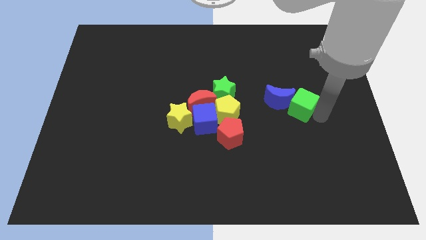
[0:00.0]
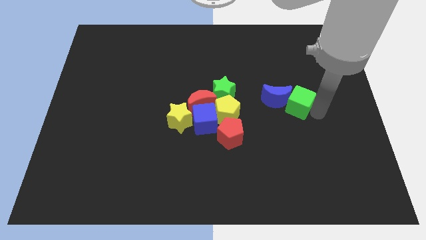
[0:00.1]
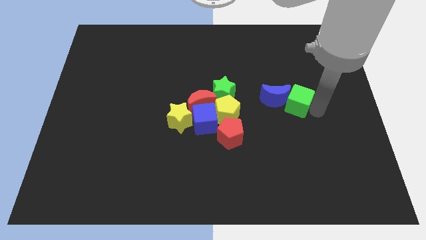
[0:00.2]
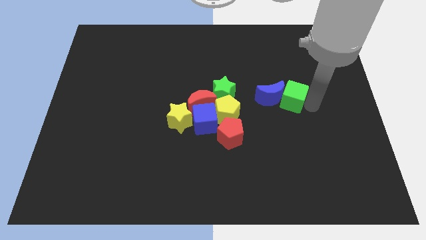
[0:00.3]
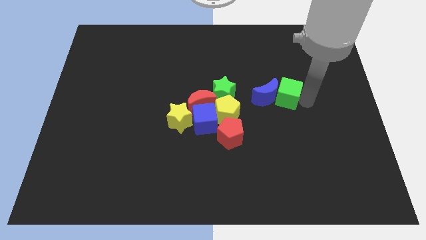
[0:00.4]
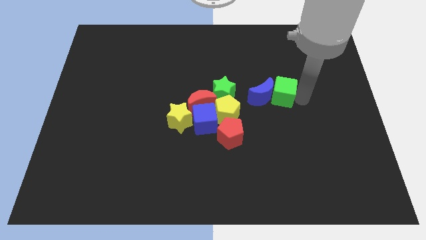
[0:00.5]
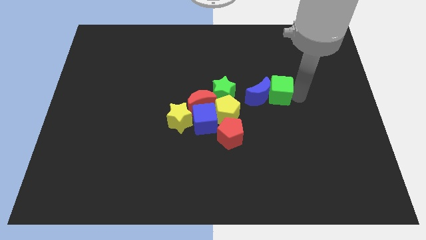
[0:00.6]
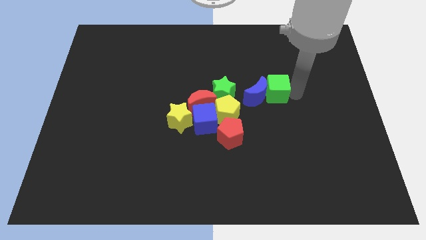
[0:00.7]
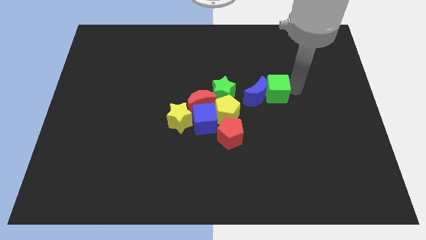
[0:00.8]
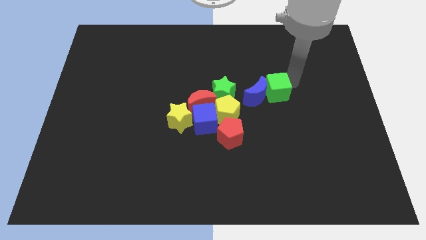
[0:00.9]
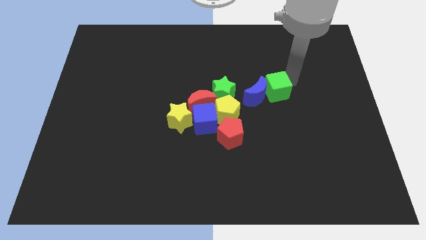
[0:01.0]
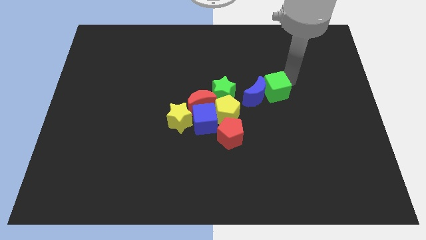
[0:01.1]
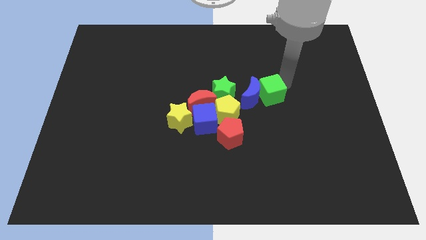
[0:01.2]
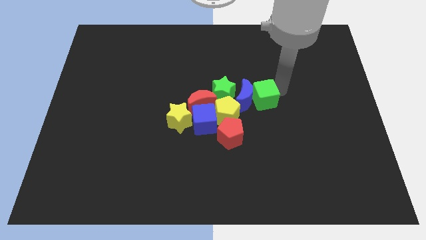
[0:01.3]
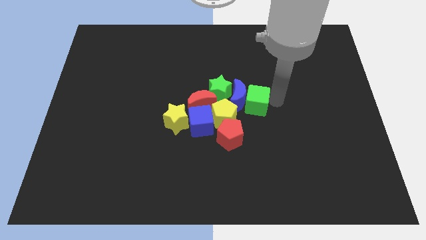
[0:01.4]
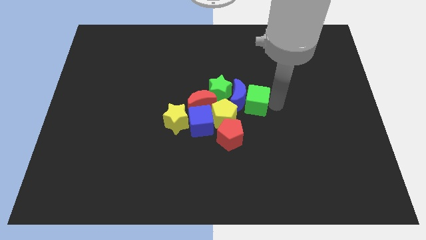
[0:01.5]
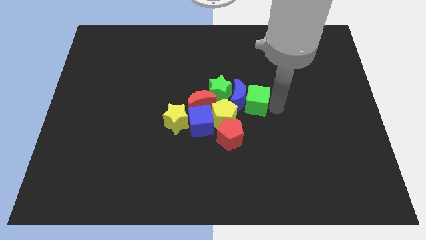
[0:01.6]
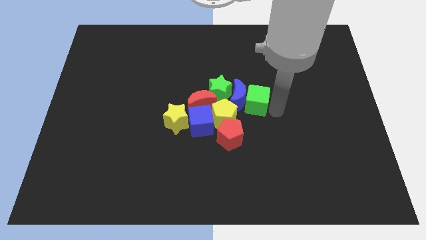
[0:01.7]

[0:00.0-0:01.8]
place the blue crescent and green cube right to the green star

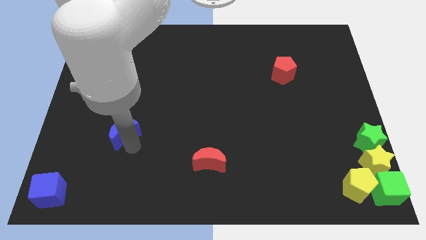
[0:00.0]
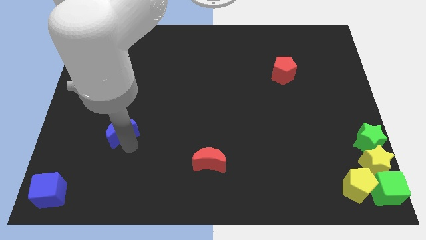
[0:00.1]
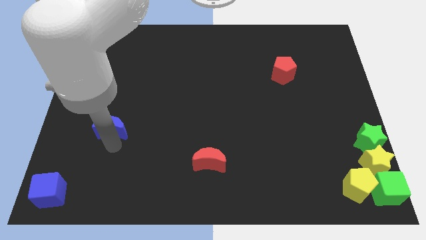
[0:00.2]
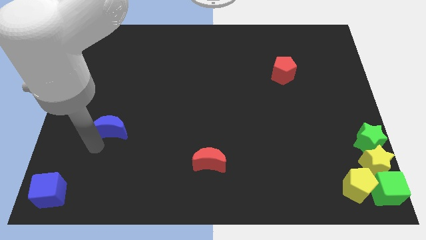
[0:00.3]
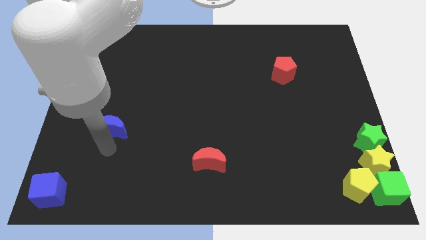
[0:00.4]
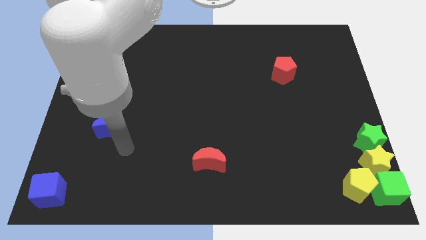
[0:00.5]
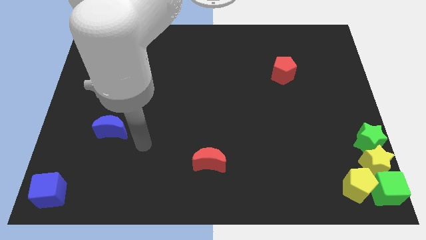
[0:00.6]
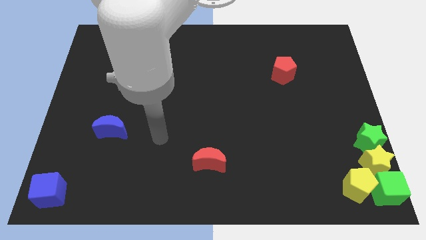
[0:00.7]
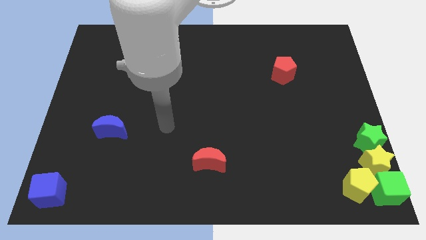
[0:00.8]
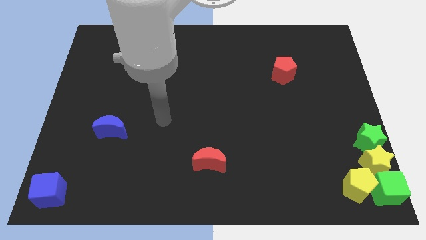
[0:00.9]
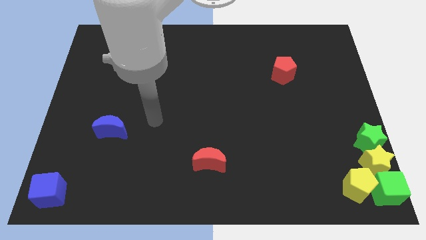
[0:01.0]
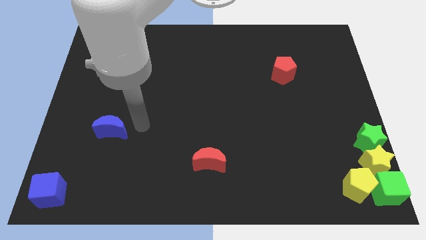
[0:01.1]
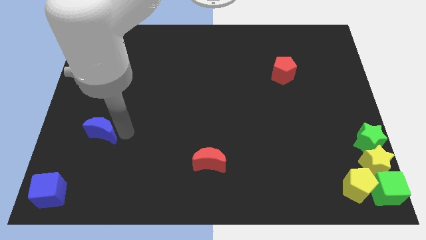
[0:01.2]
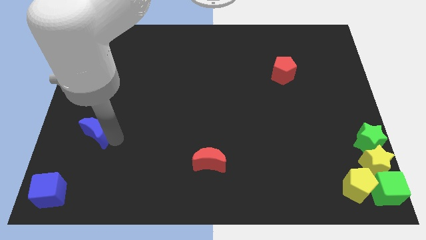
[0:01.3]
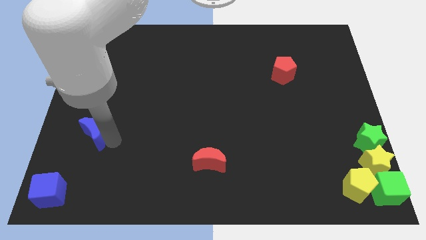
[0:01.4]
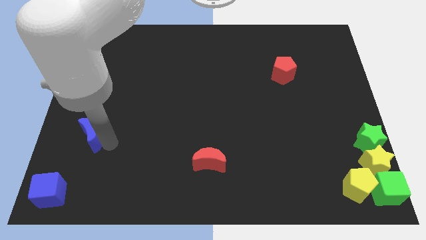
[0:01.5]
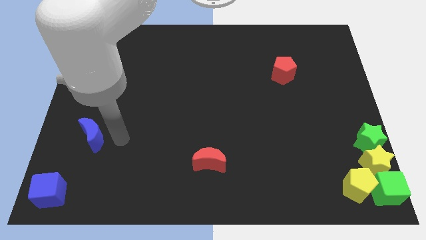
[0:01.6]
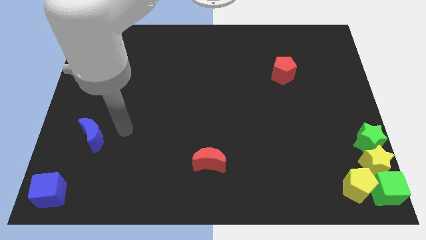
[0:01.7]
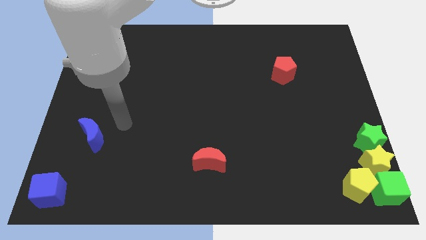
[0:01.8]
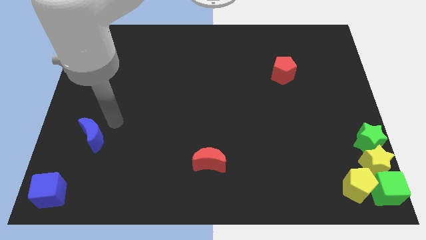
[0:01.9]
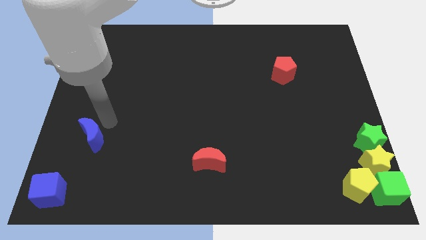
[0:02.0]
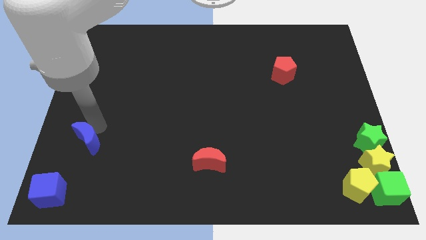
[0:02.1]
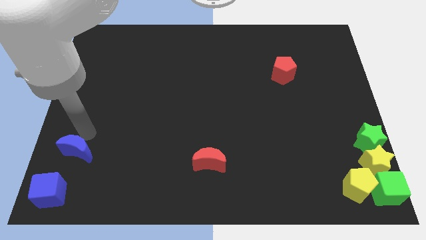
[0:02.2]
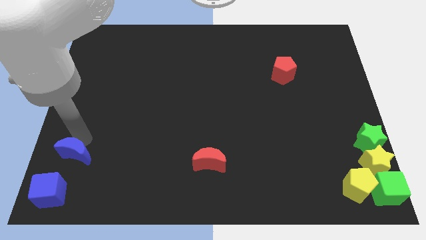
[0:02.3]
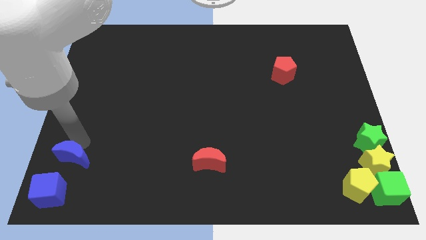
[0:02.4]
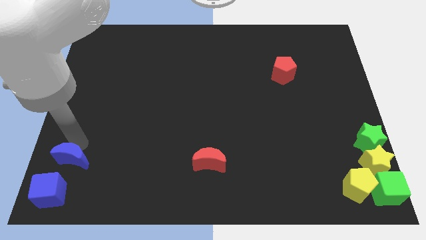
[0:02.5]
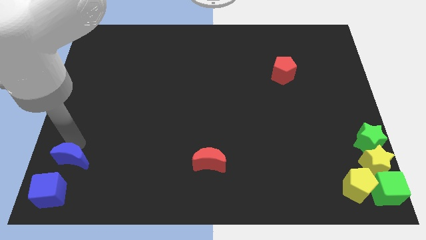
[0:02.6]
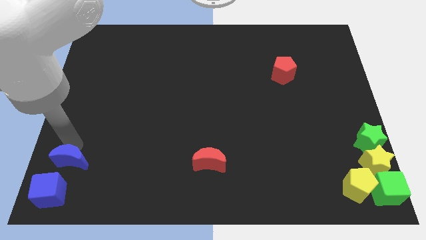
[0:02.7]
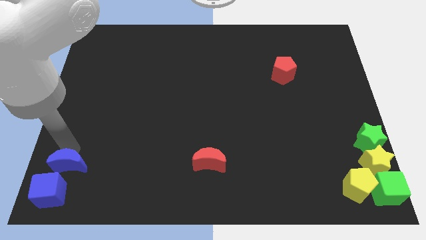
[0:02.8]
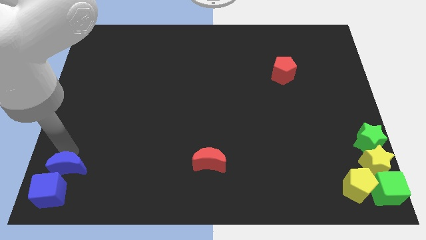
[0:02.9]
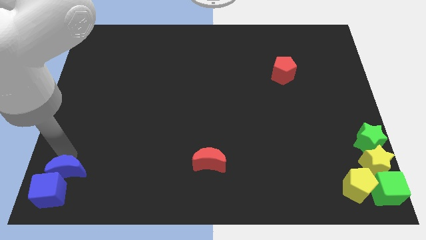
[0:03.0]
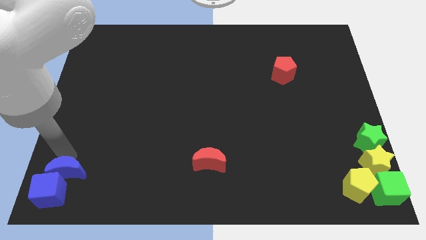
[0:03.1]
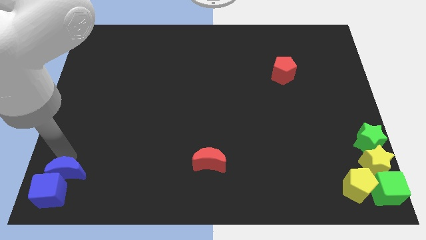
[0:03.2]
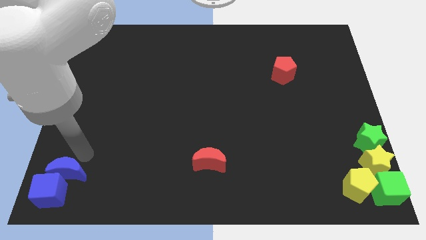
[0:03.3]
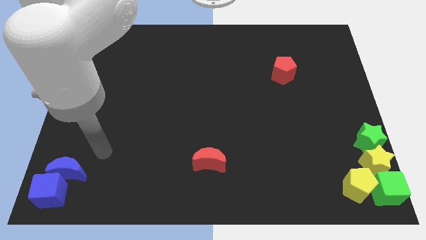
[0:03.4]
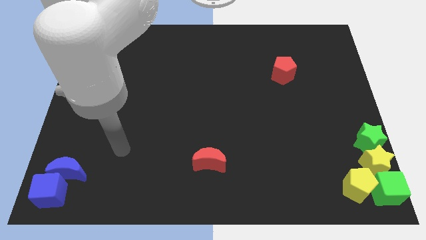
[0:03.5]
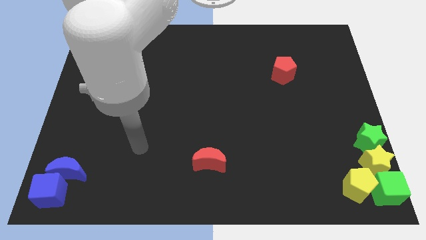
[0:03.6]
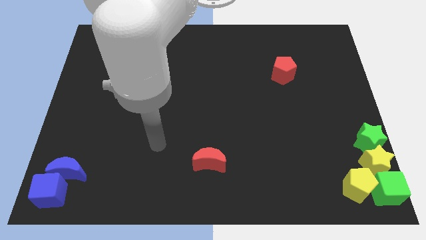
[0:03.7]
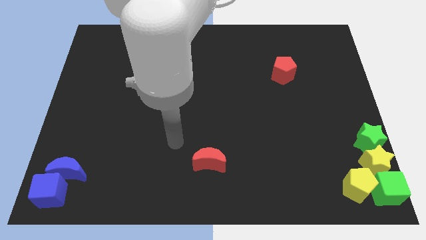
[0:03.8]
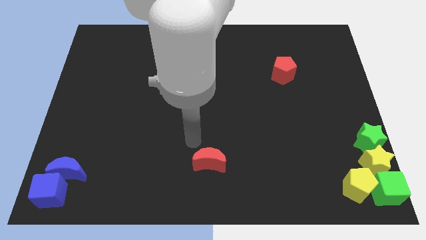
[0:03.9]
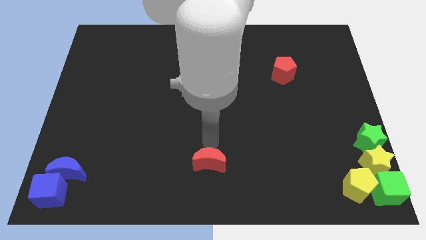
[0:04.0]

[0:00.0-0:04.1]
push the blue crescent into the blue cube

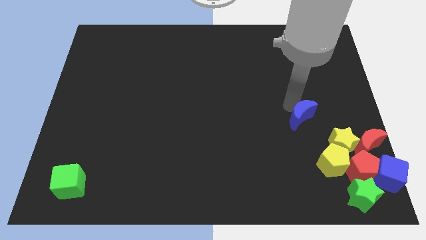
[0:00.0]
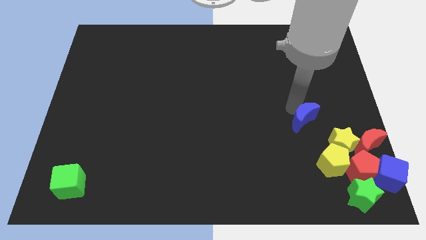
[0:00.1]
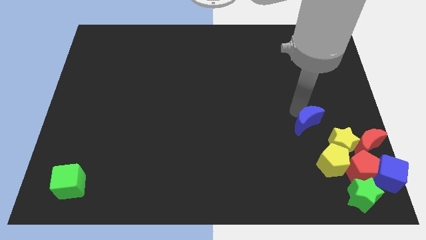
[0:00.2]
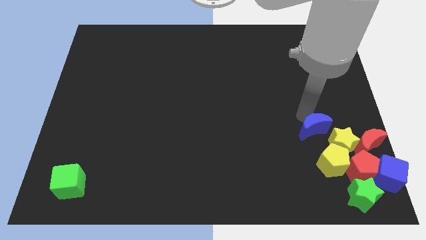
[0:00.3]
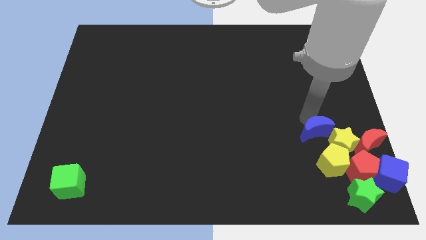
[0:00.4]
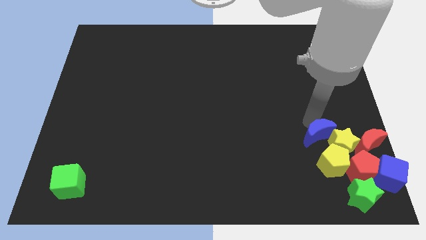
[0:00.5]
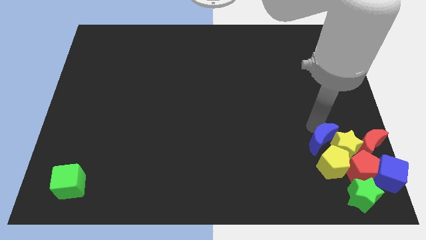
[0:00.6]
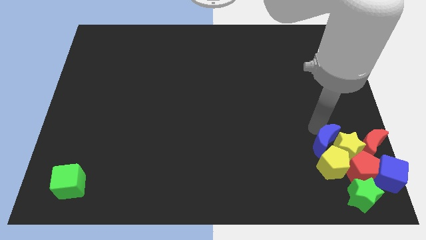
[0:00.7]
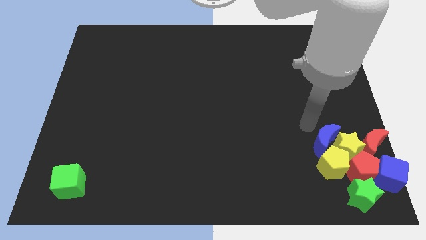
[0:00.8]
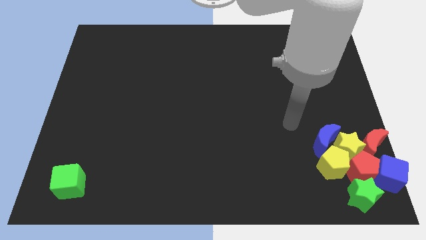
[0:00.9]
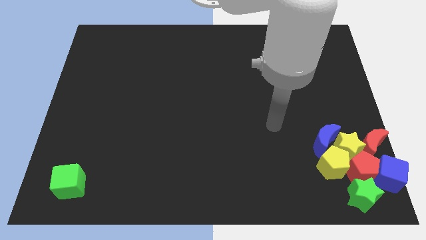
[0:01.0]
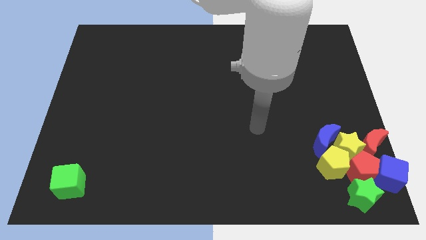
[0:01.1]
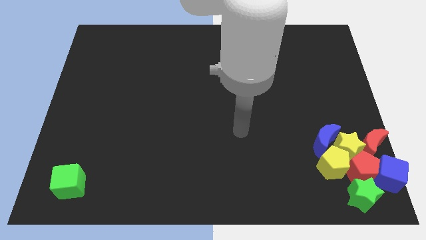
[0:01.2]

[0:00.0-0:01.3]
push the blue moon into yellow blocks

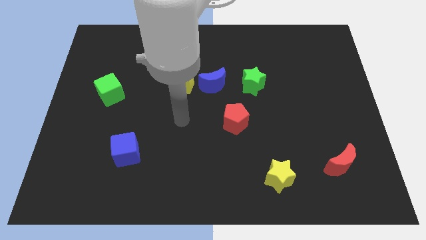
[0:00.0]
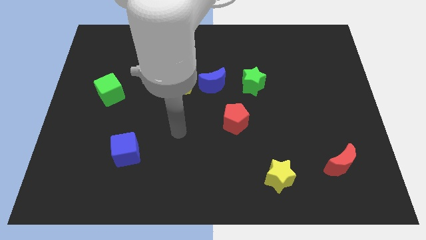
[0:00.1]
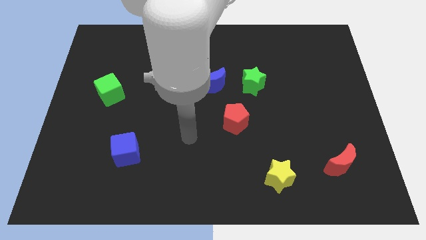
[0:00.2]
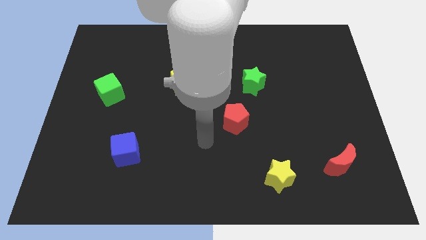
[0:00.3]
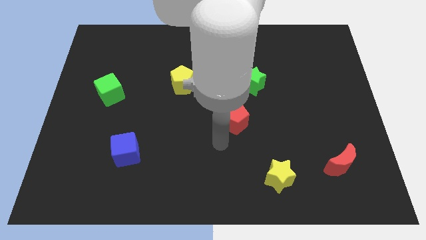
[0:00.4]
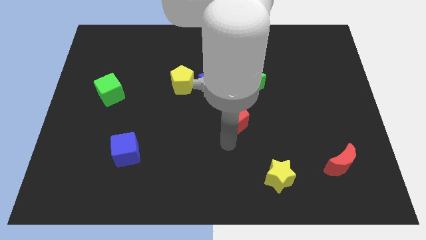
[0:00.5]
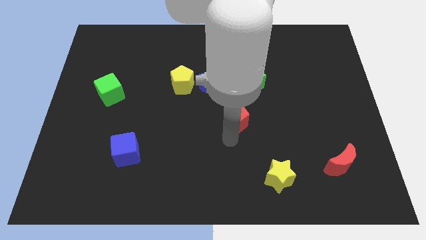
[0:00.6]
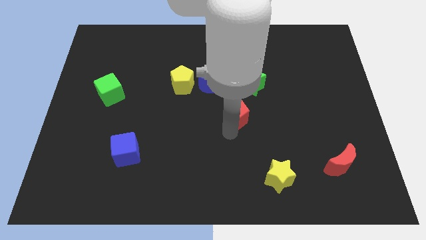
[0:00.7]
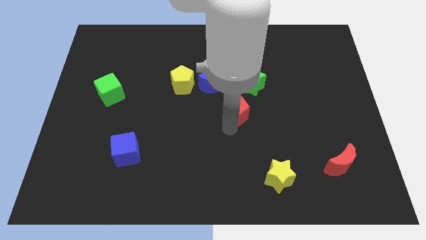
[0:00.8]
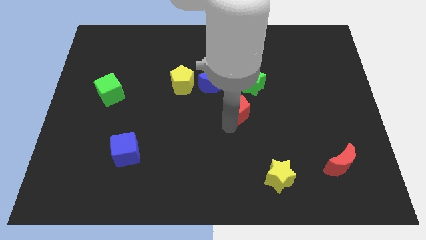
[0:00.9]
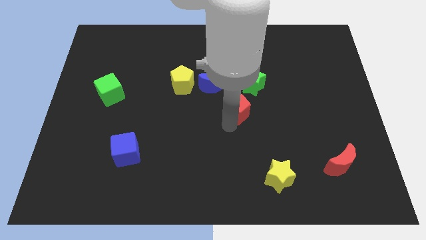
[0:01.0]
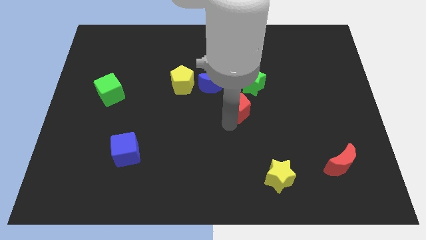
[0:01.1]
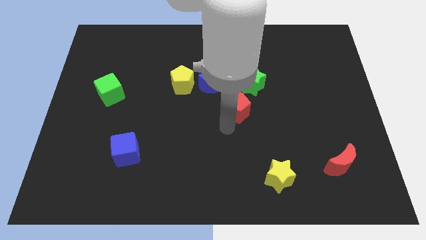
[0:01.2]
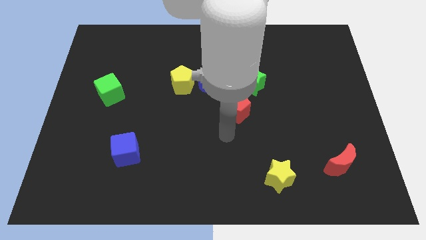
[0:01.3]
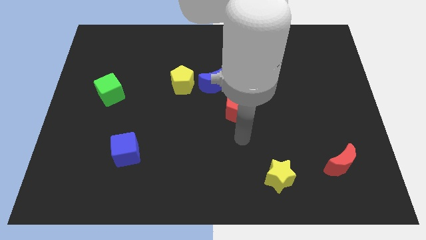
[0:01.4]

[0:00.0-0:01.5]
push the red pentagon up slightly
